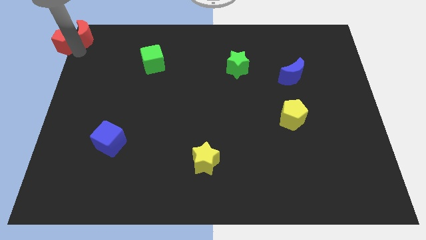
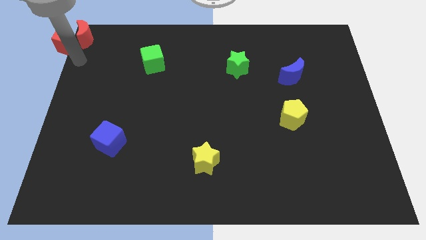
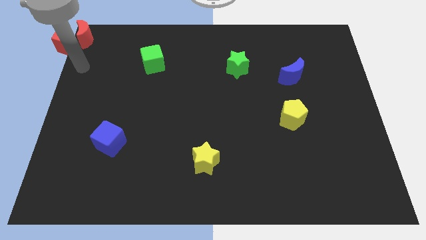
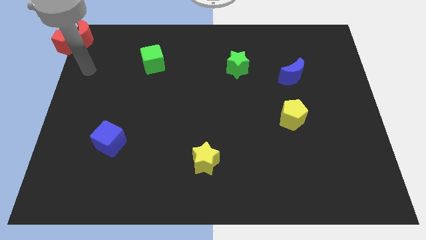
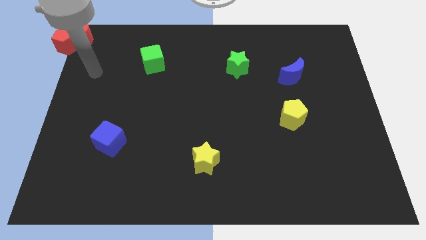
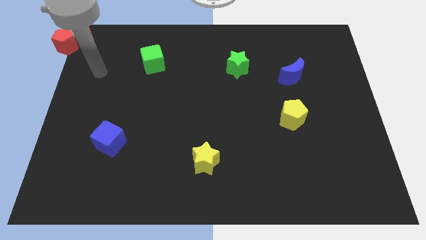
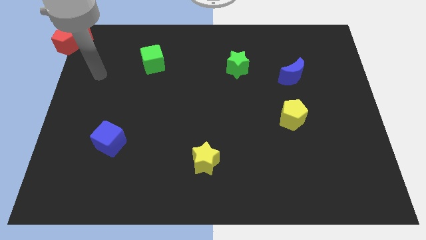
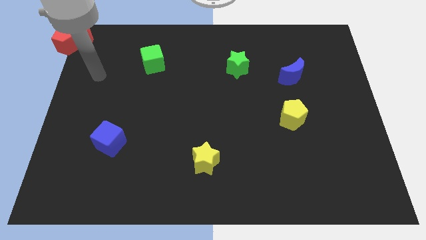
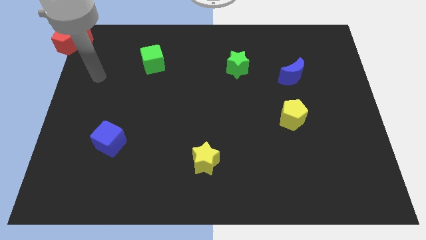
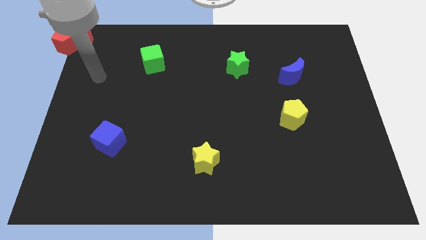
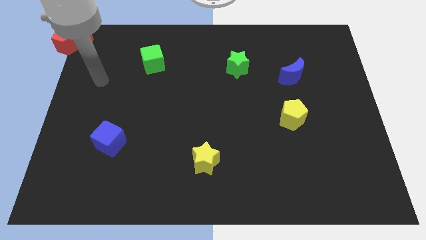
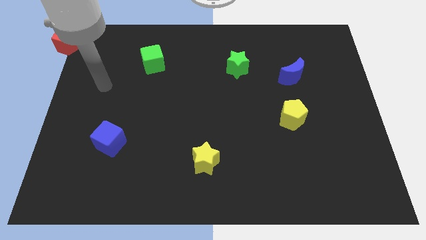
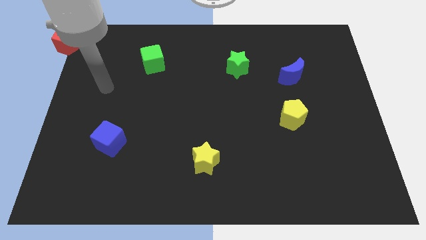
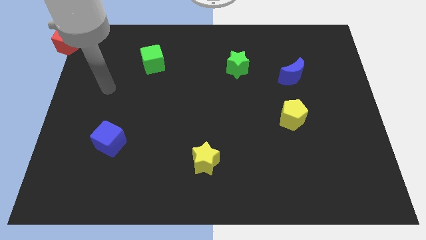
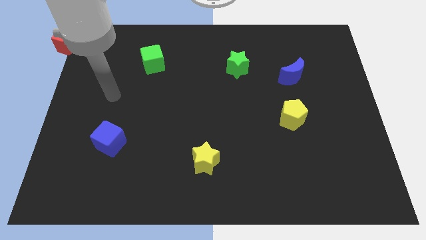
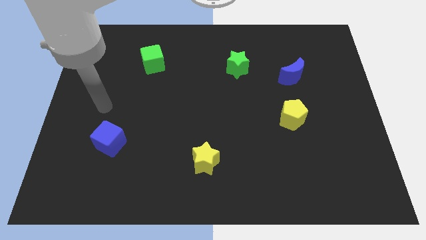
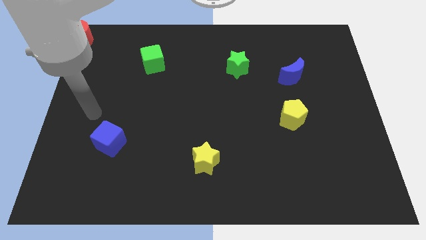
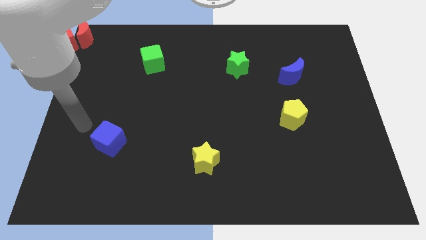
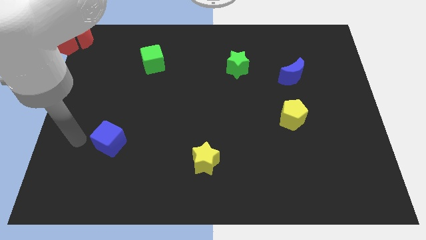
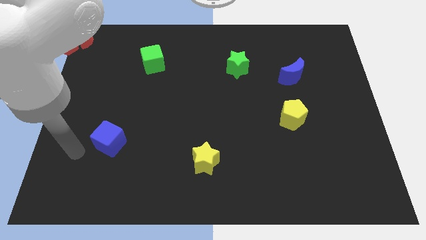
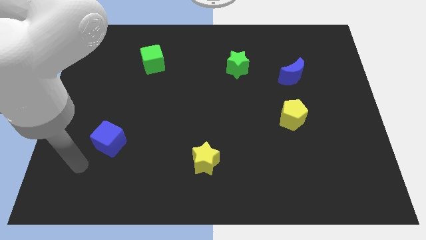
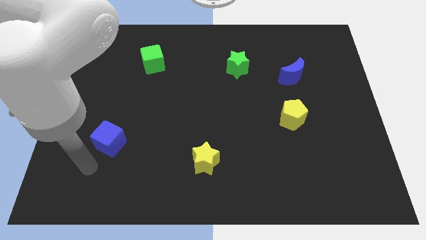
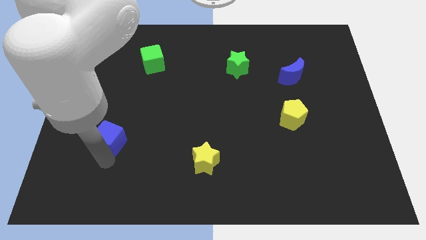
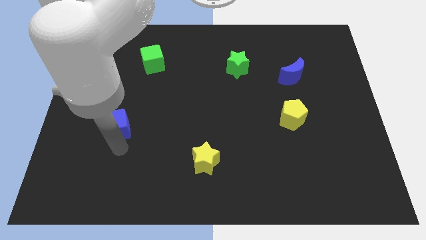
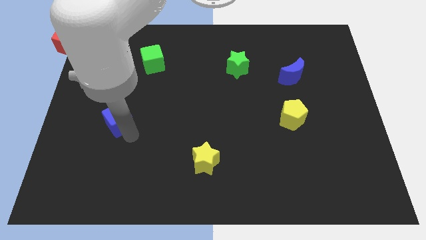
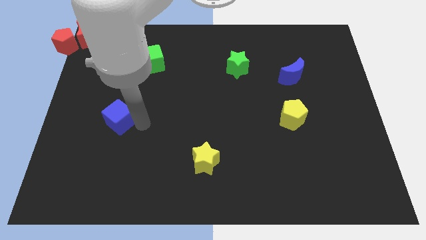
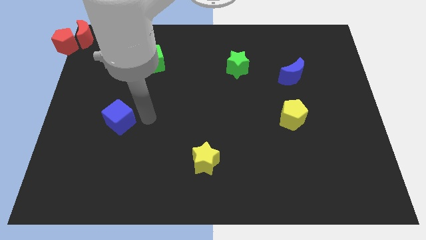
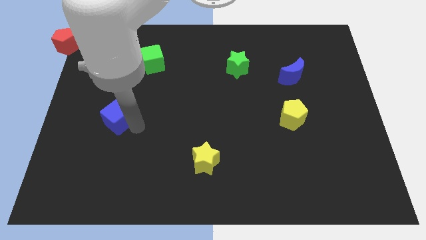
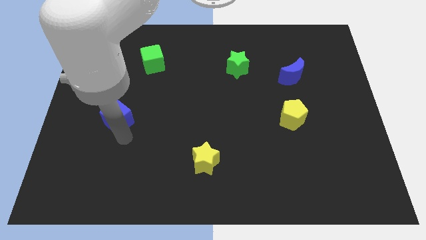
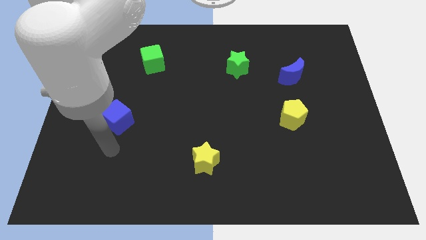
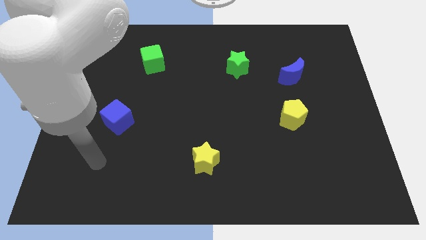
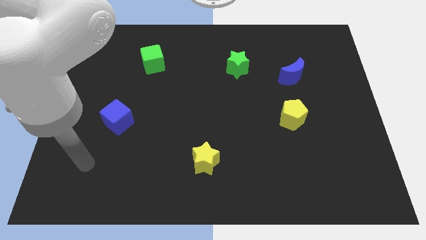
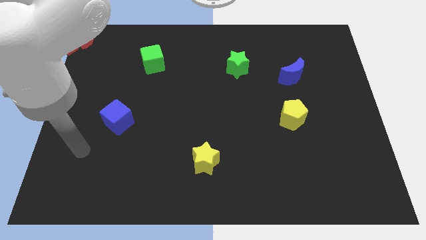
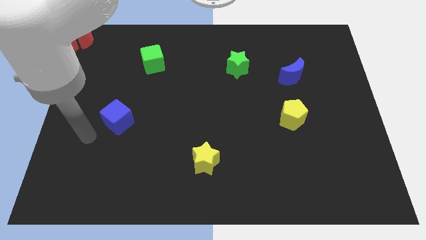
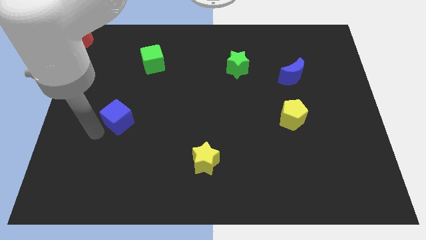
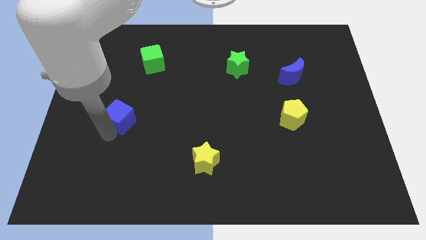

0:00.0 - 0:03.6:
move the blue cube slightly

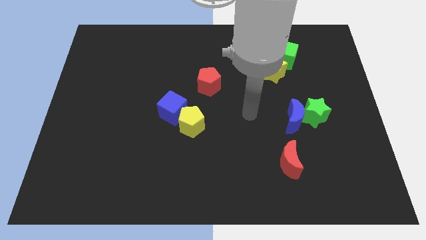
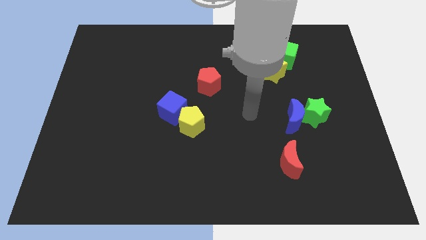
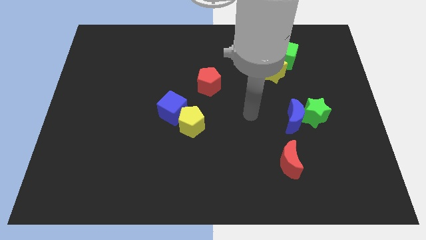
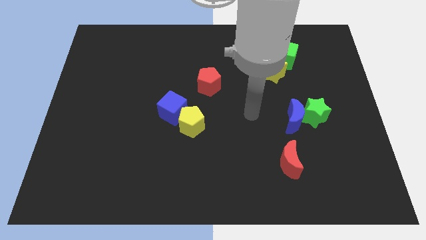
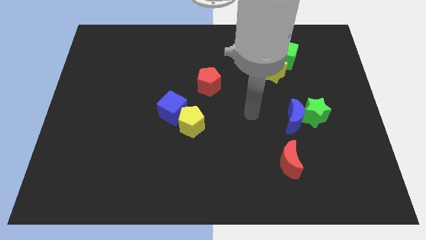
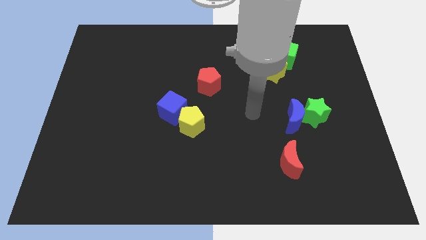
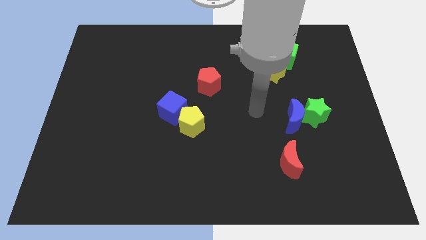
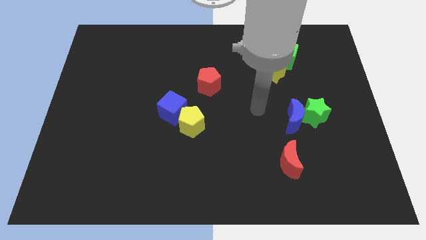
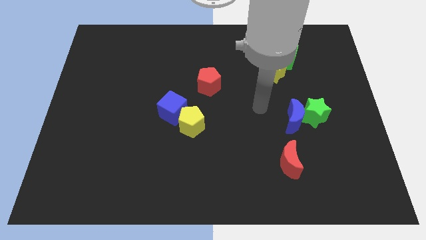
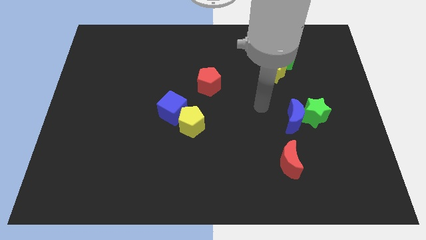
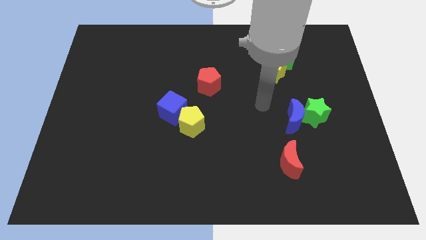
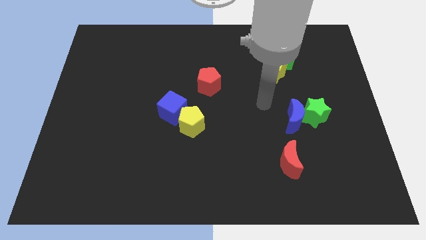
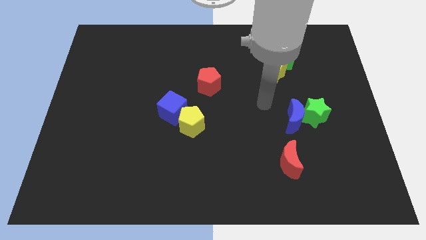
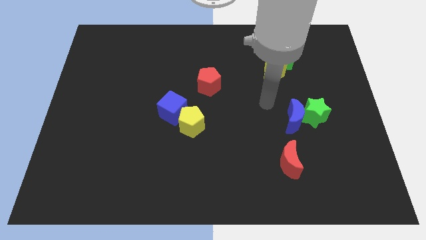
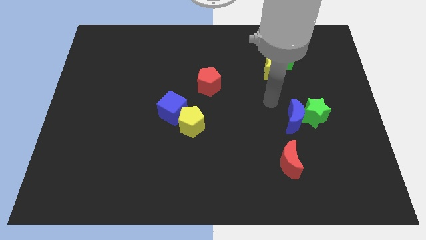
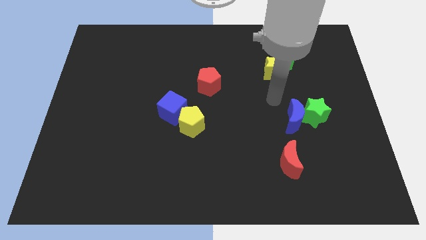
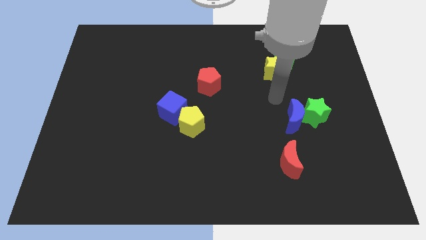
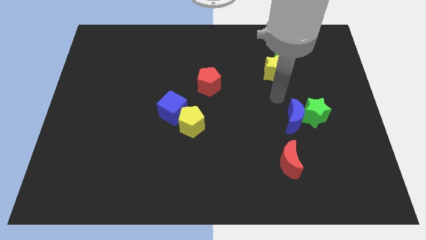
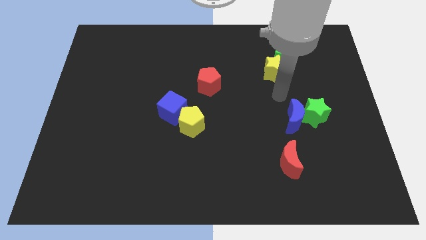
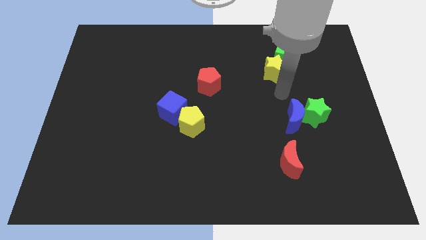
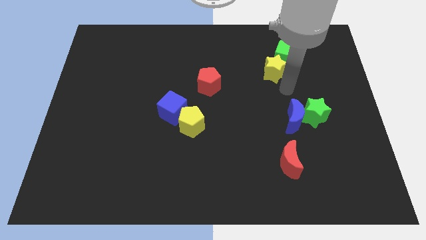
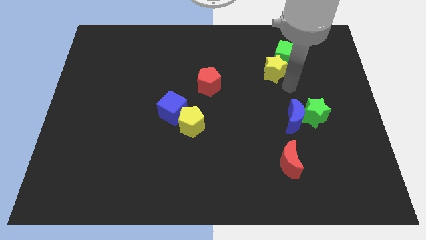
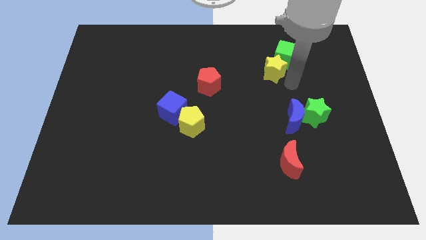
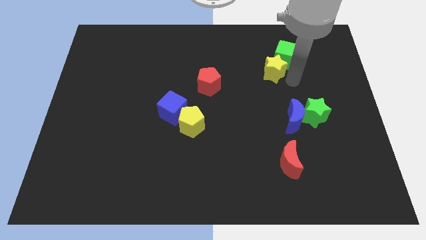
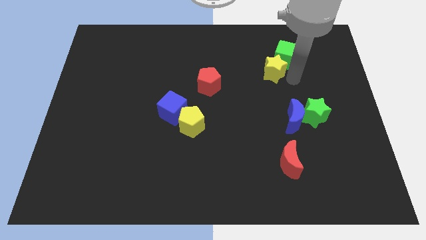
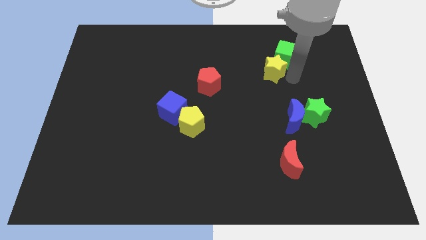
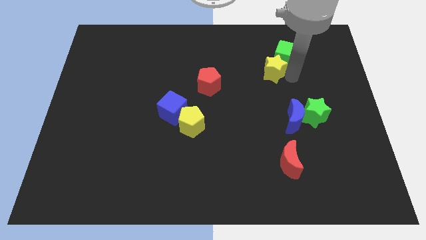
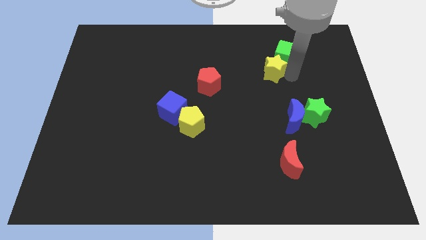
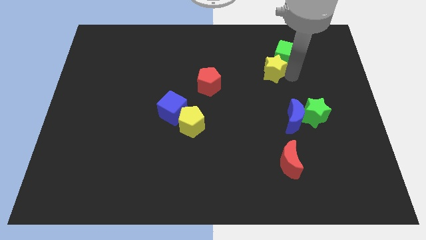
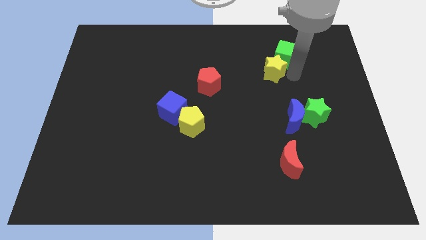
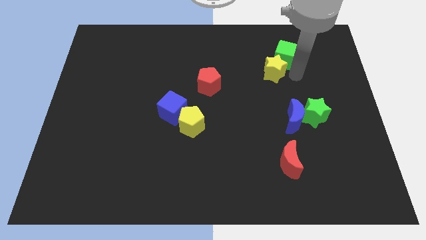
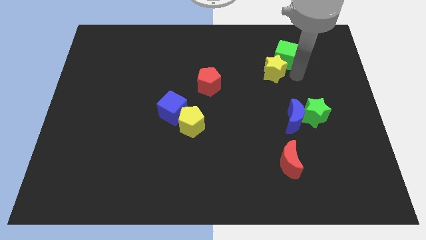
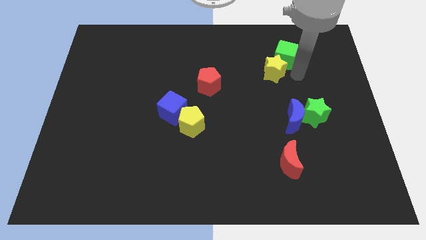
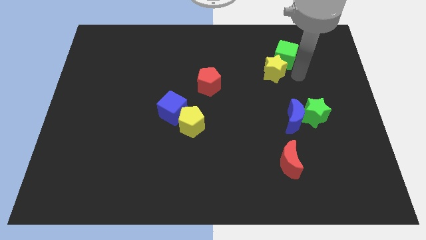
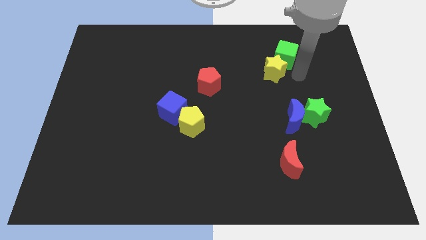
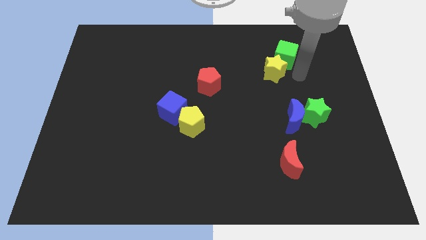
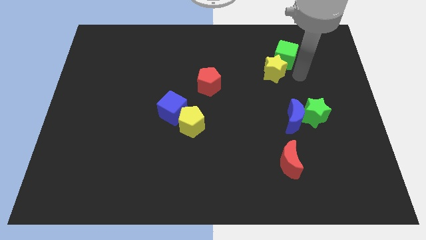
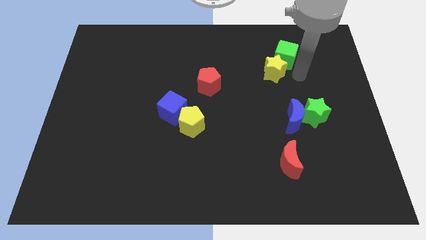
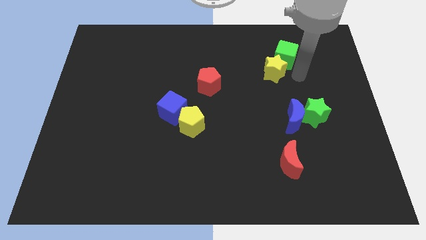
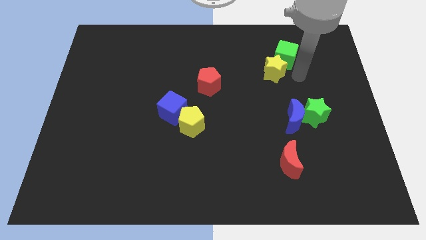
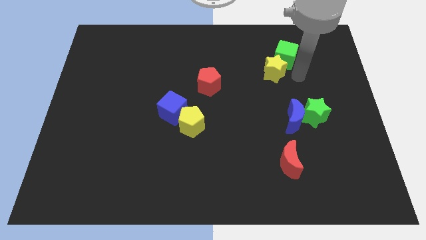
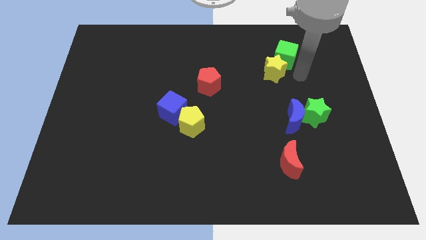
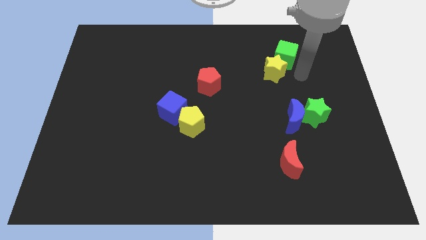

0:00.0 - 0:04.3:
place the arm below the green cube

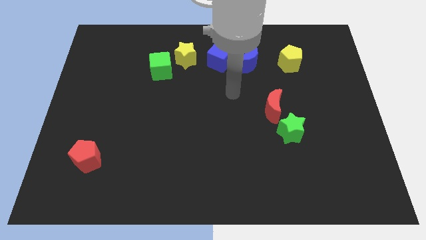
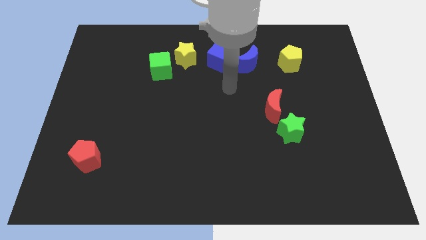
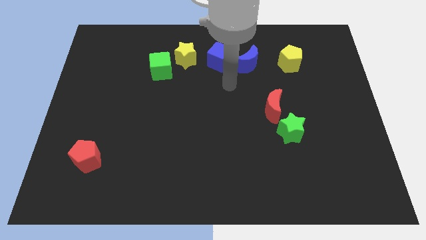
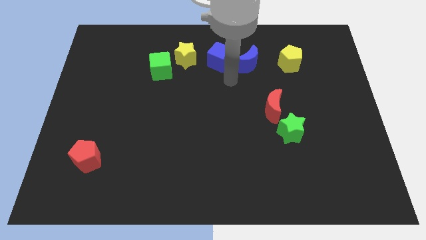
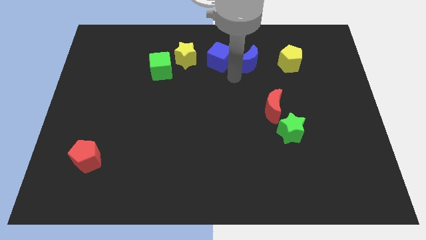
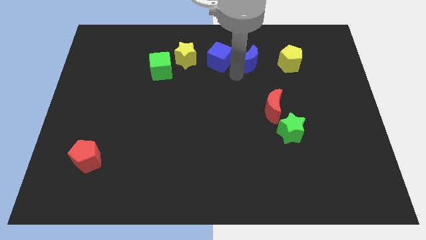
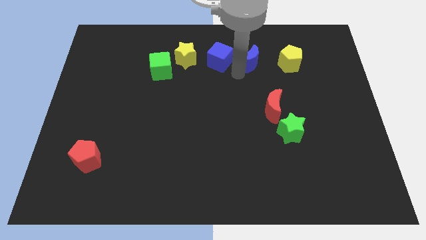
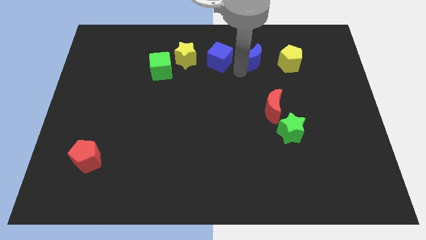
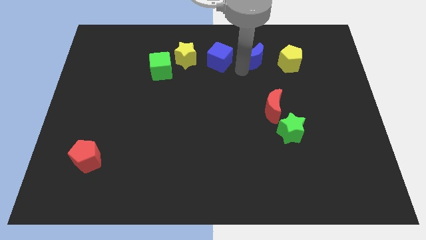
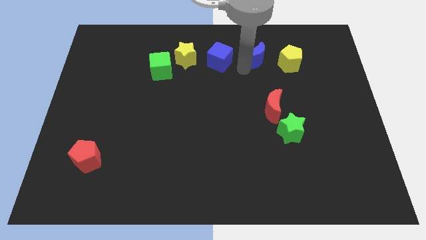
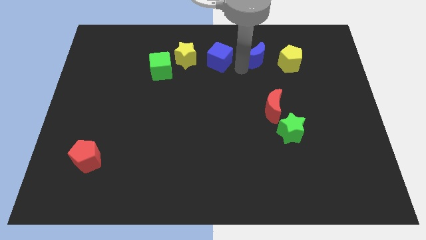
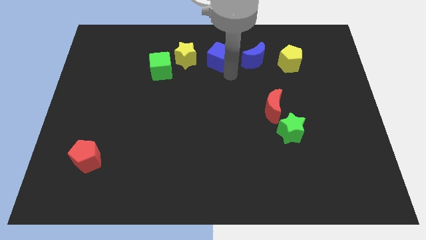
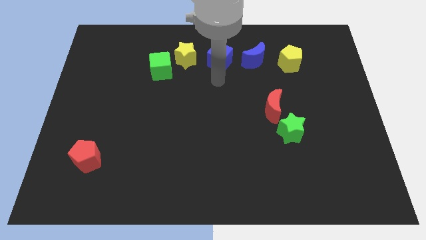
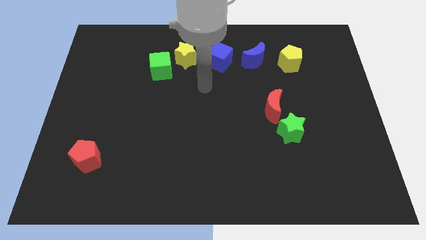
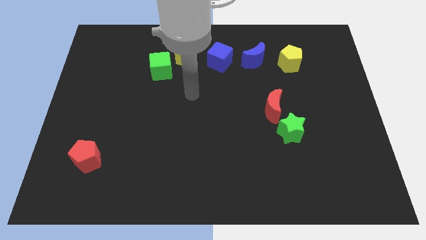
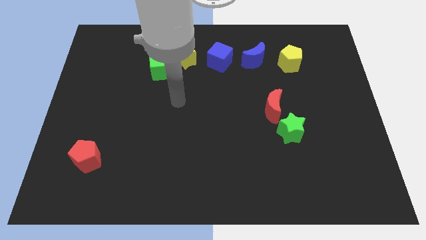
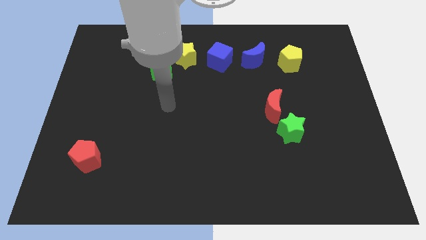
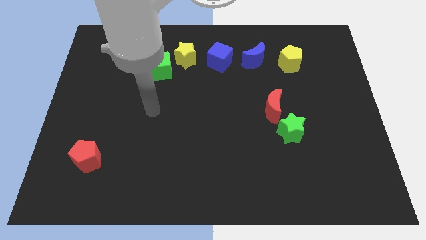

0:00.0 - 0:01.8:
put the blue crescent to the left side of the yellow pentagon
